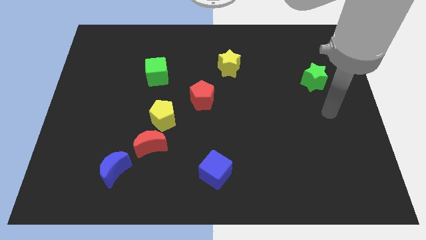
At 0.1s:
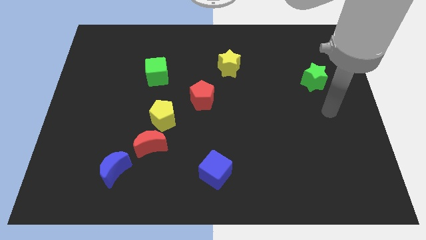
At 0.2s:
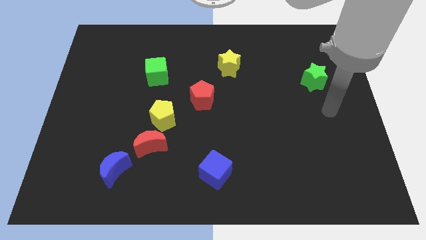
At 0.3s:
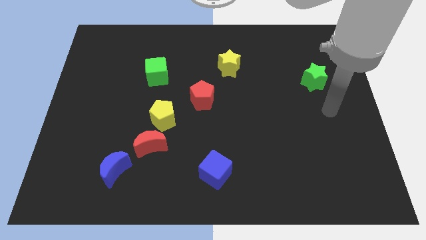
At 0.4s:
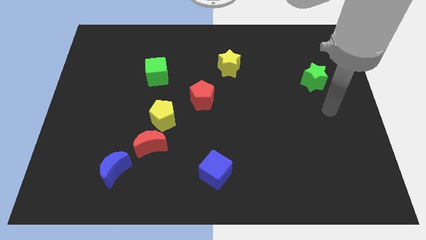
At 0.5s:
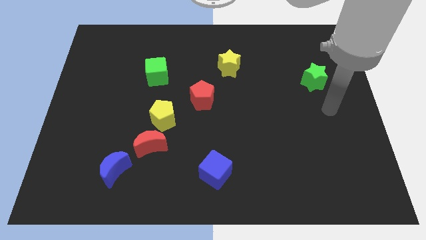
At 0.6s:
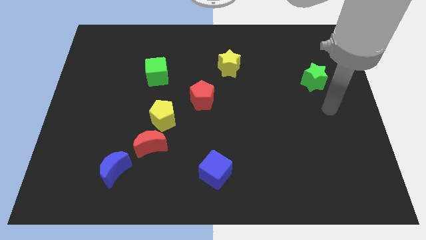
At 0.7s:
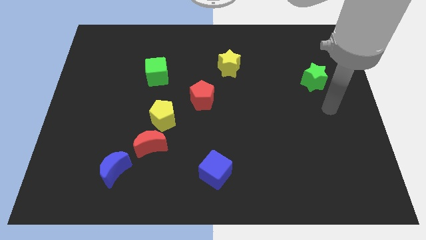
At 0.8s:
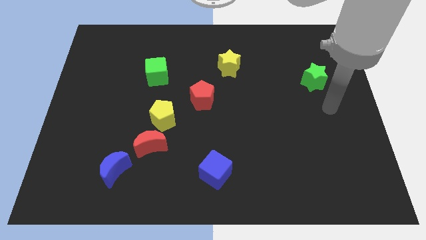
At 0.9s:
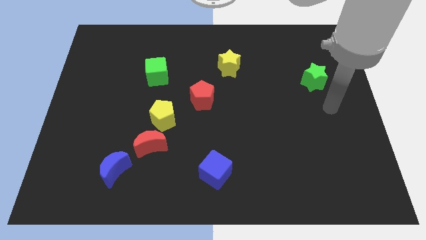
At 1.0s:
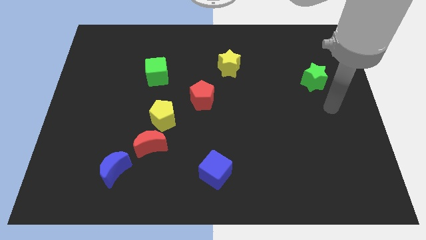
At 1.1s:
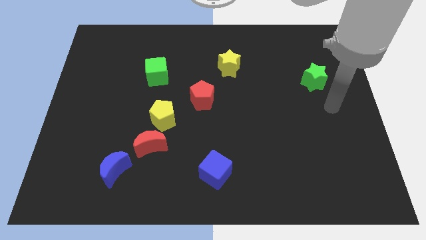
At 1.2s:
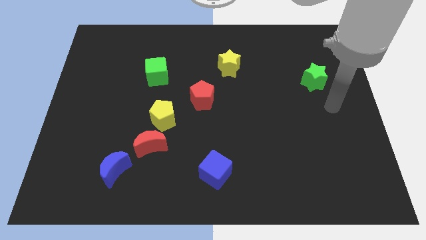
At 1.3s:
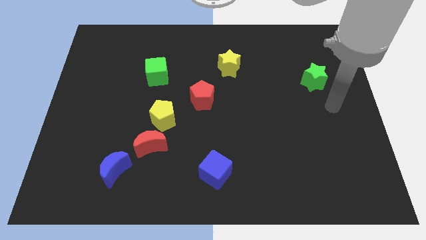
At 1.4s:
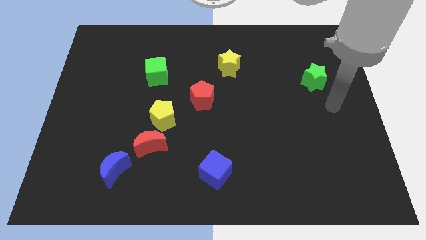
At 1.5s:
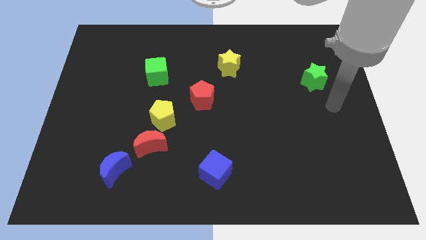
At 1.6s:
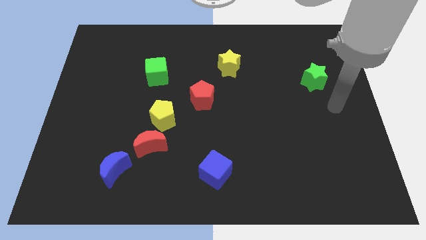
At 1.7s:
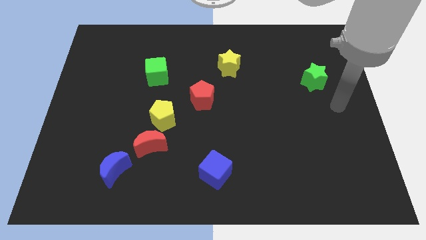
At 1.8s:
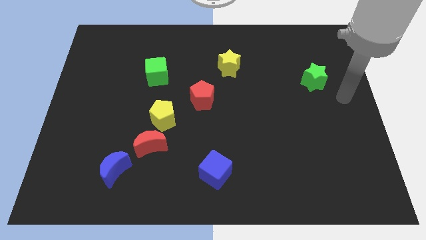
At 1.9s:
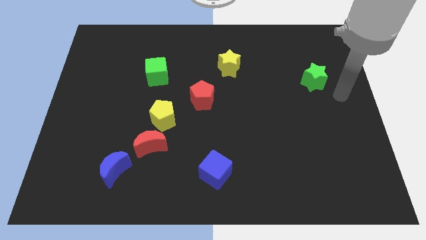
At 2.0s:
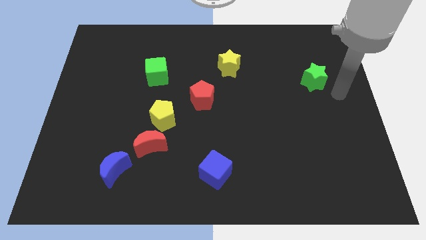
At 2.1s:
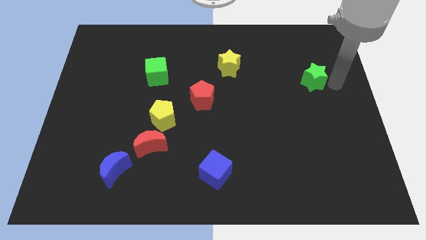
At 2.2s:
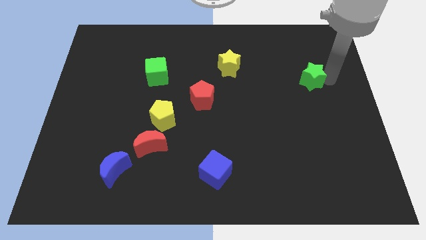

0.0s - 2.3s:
tap at the right side of the green star

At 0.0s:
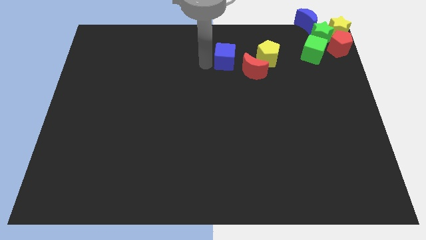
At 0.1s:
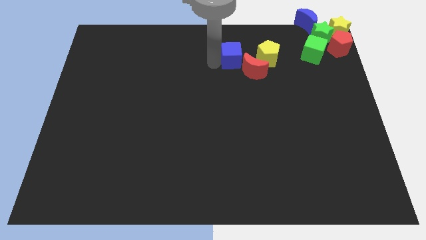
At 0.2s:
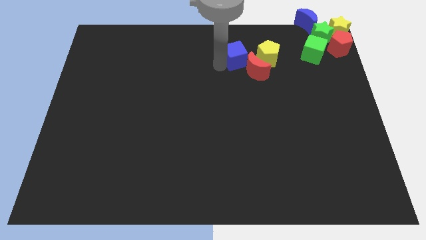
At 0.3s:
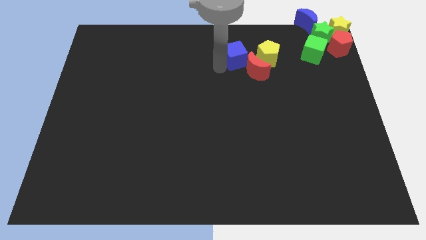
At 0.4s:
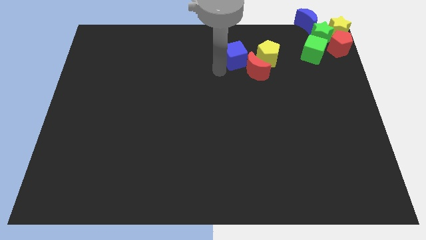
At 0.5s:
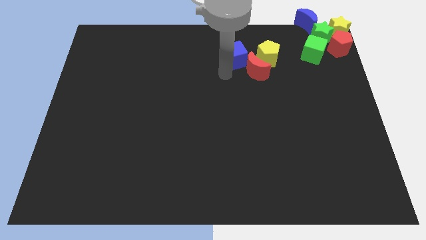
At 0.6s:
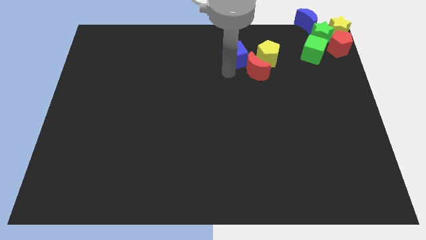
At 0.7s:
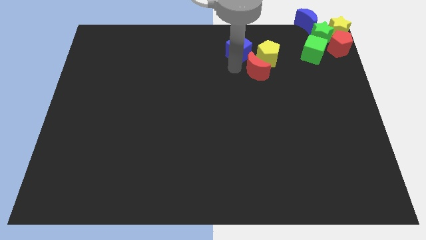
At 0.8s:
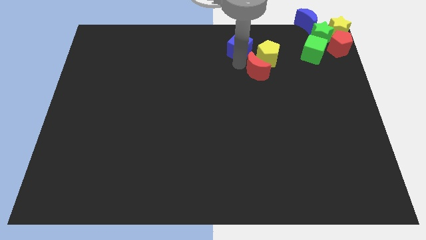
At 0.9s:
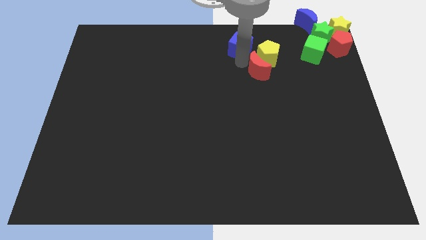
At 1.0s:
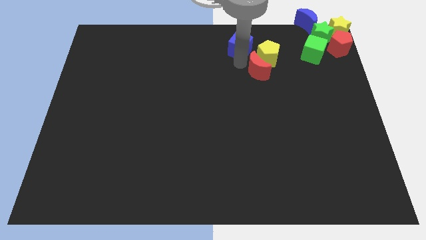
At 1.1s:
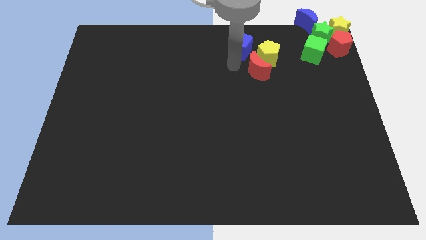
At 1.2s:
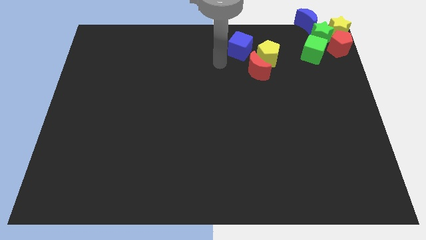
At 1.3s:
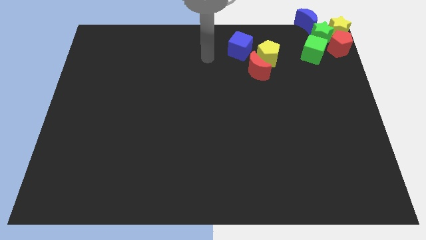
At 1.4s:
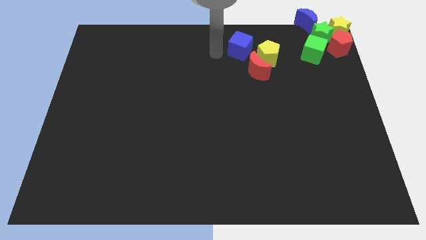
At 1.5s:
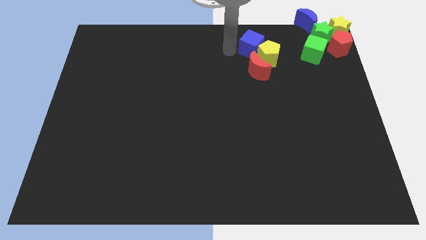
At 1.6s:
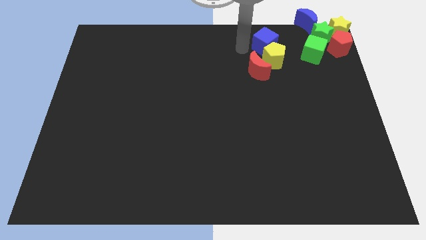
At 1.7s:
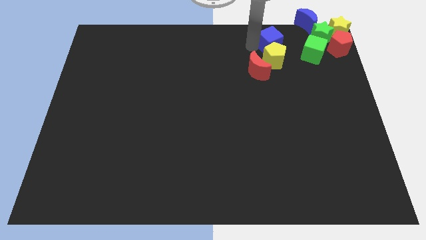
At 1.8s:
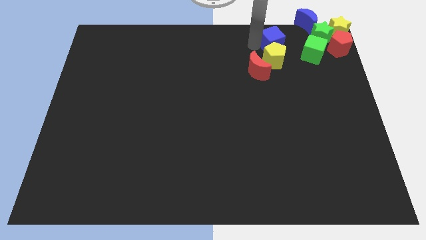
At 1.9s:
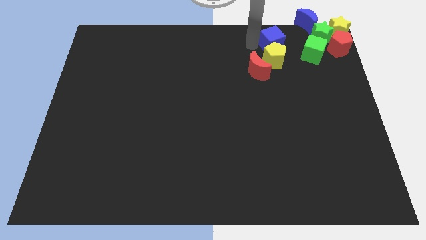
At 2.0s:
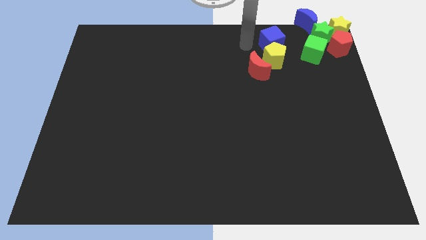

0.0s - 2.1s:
place the blue cube above the yellow pentagon

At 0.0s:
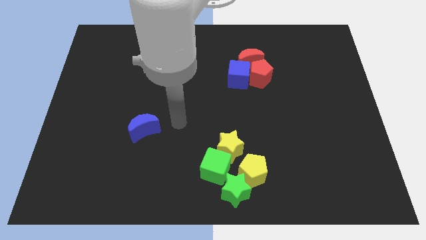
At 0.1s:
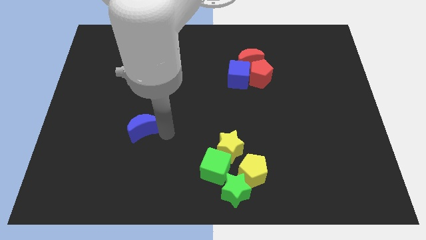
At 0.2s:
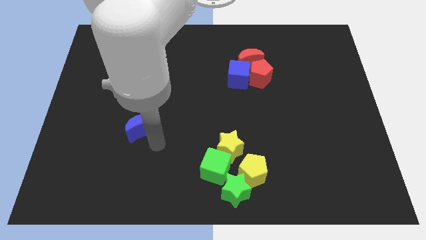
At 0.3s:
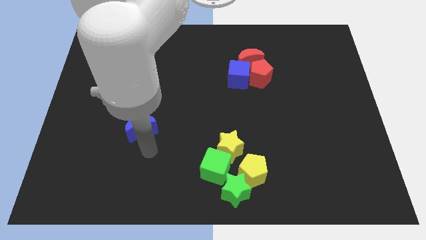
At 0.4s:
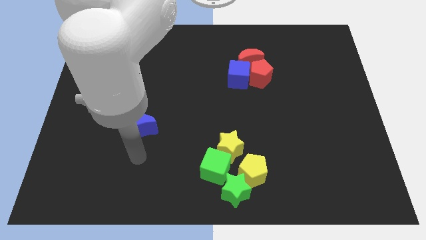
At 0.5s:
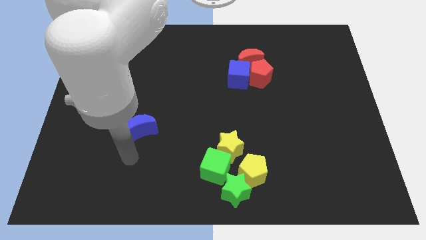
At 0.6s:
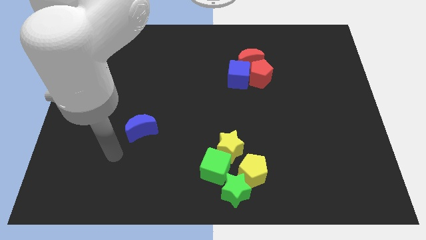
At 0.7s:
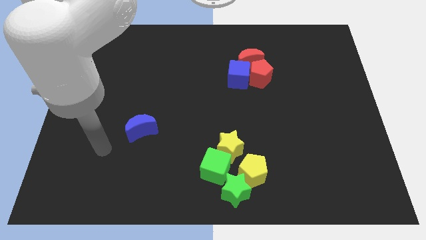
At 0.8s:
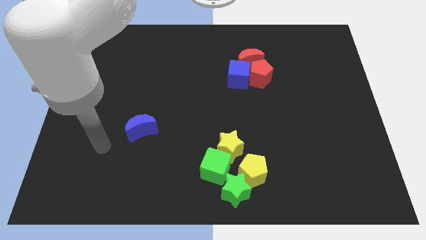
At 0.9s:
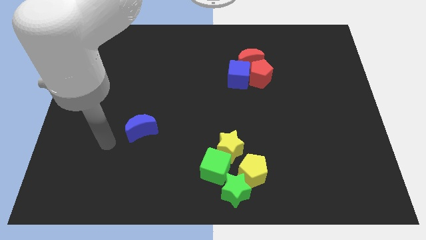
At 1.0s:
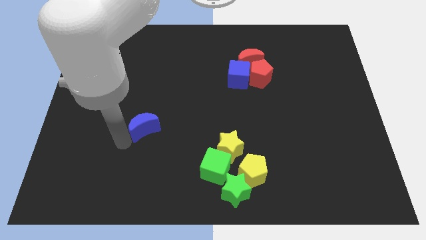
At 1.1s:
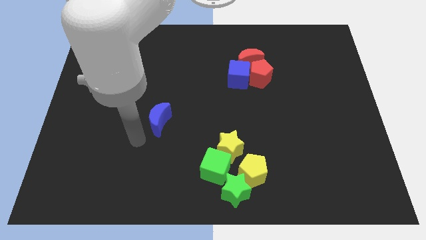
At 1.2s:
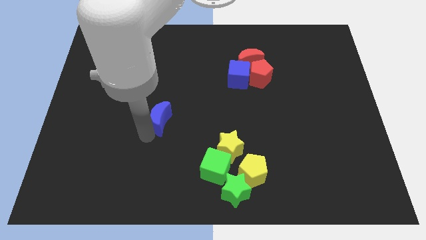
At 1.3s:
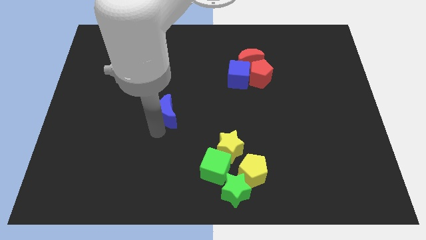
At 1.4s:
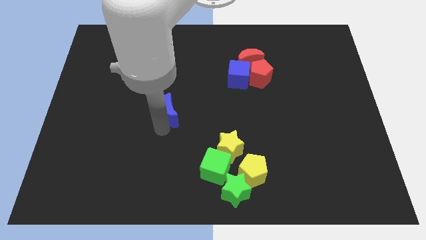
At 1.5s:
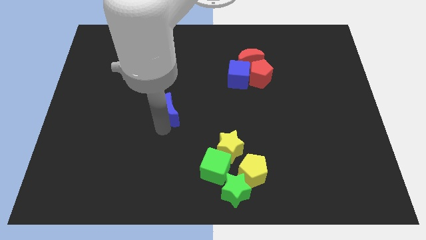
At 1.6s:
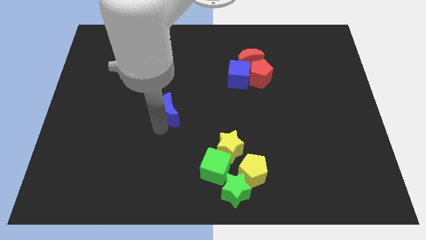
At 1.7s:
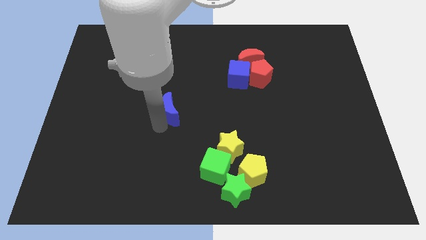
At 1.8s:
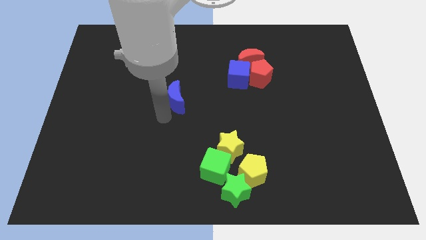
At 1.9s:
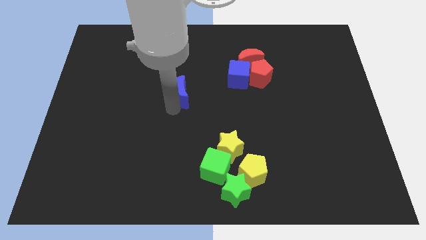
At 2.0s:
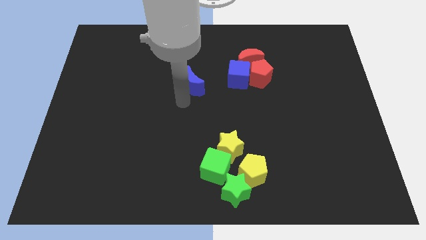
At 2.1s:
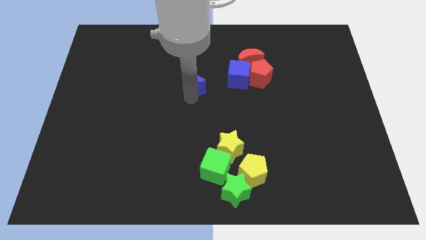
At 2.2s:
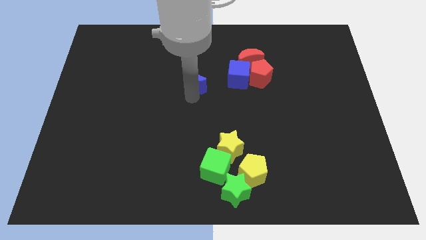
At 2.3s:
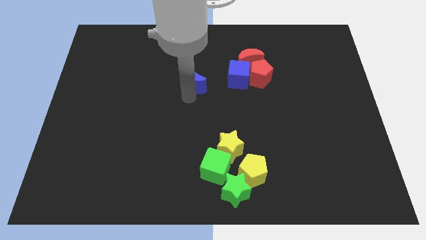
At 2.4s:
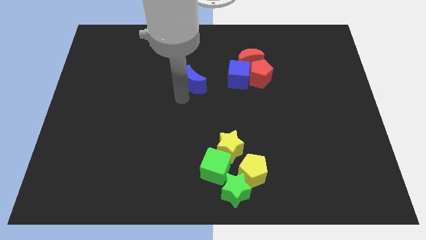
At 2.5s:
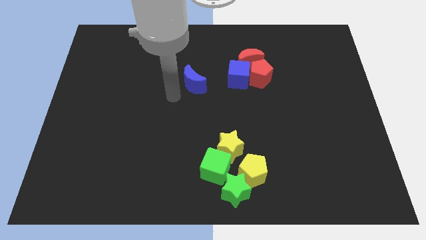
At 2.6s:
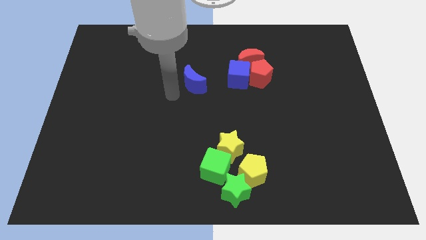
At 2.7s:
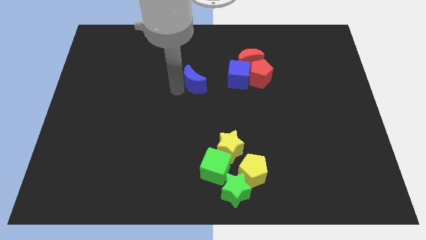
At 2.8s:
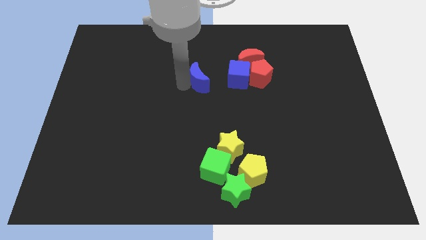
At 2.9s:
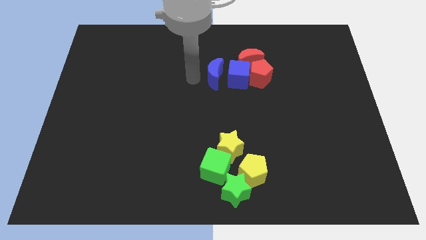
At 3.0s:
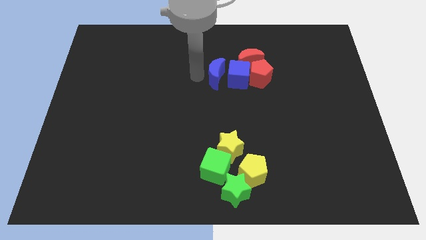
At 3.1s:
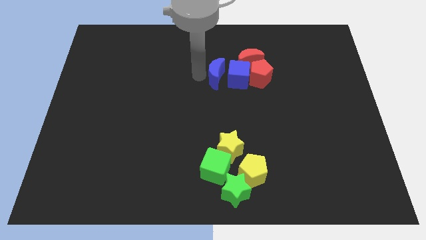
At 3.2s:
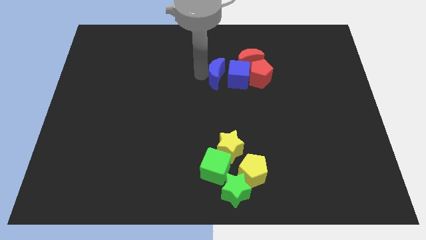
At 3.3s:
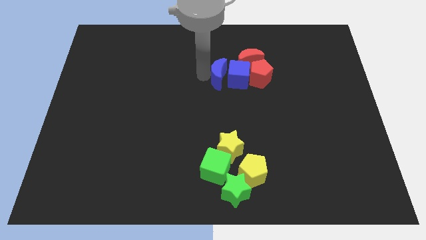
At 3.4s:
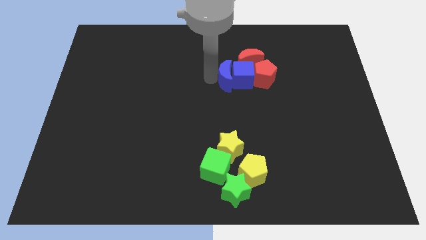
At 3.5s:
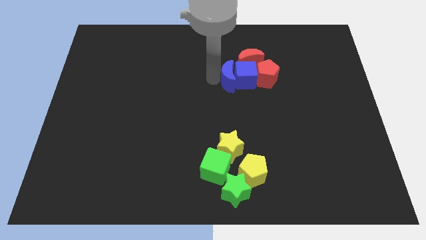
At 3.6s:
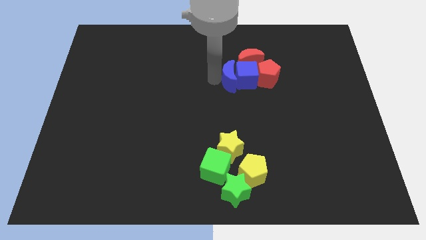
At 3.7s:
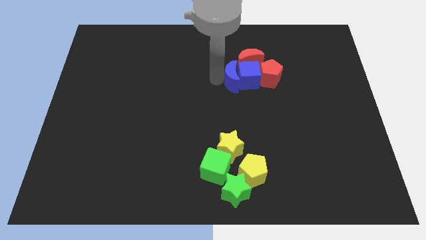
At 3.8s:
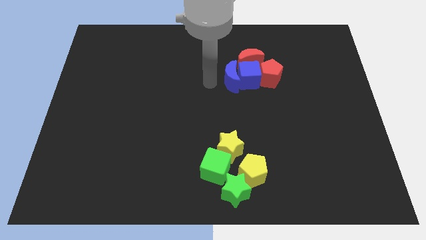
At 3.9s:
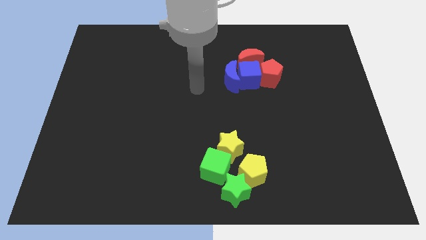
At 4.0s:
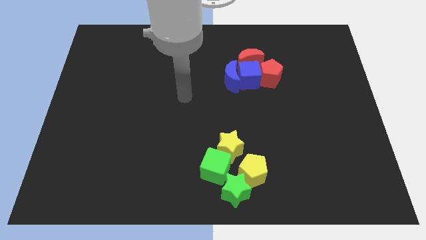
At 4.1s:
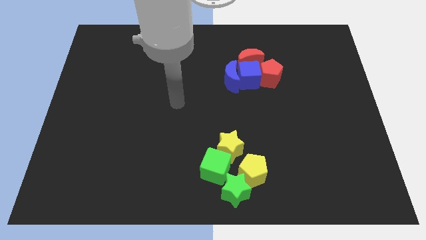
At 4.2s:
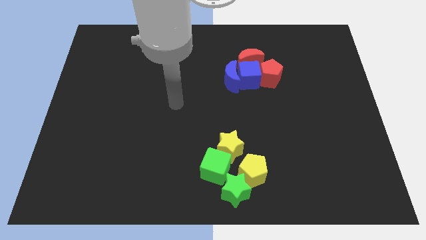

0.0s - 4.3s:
push the blue moon into the blue cube

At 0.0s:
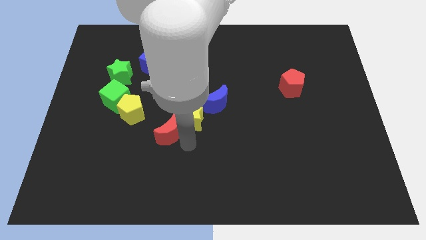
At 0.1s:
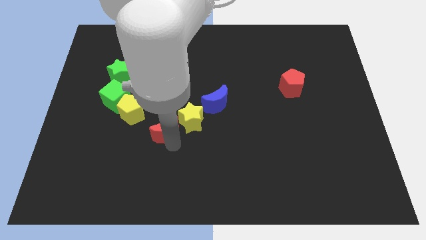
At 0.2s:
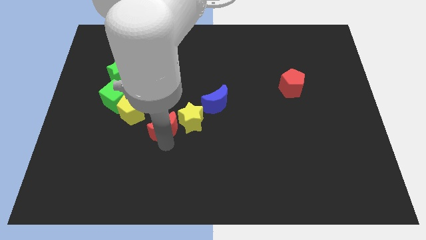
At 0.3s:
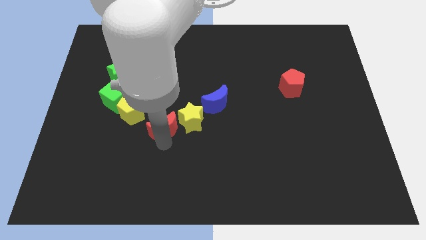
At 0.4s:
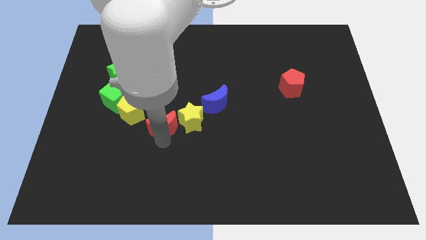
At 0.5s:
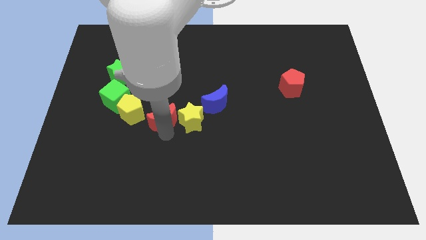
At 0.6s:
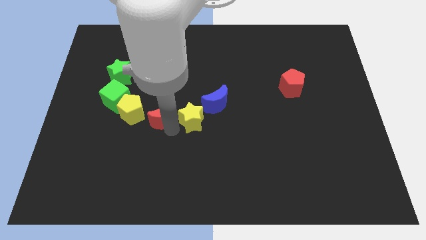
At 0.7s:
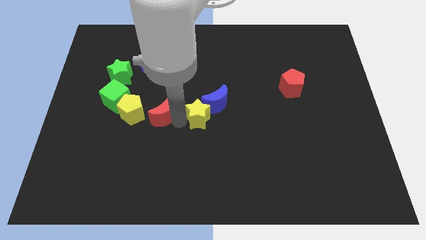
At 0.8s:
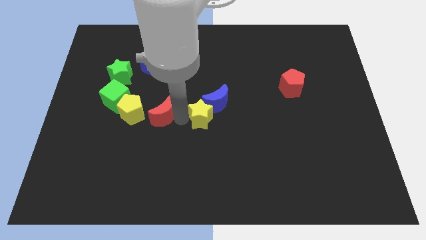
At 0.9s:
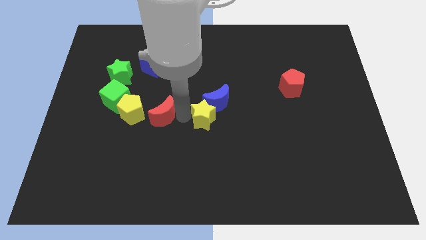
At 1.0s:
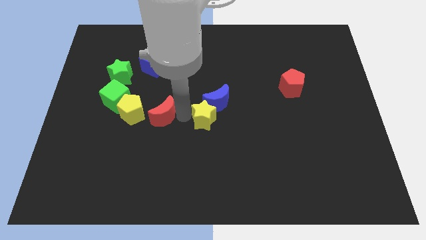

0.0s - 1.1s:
place your arm in between the yellow star and red moon
